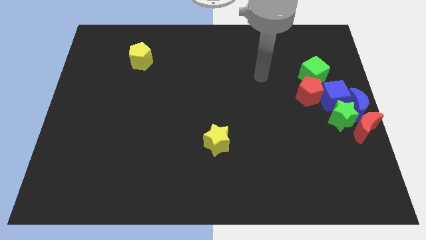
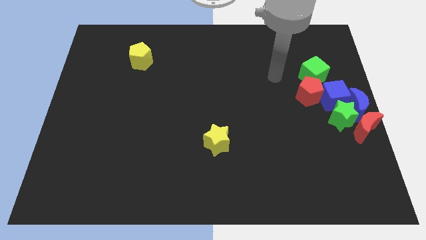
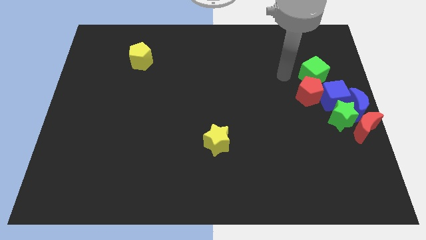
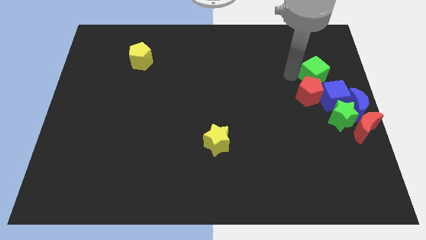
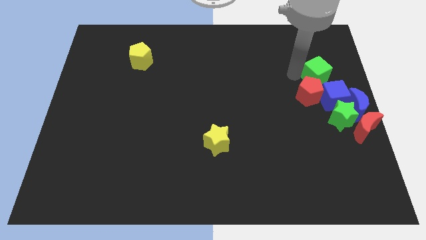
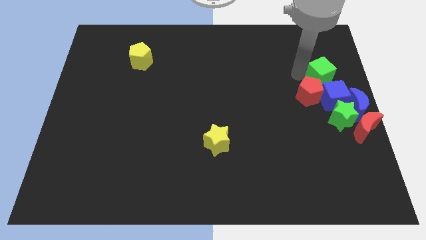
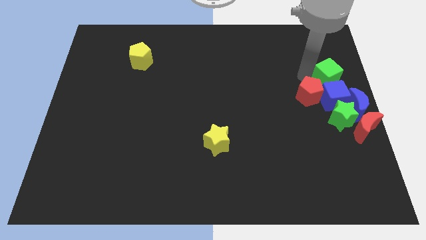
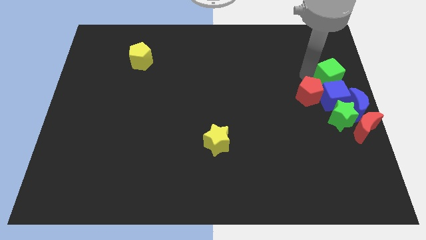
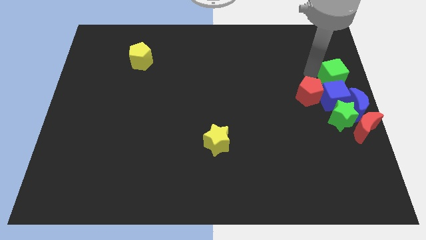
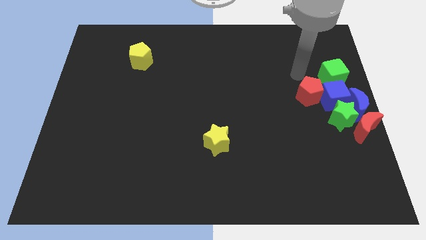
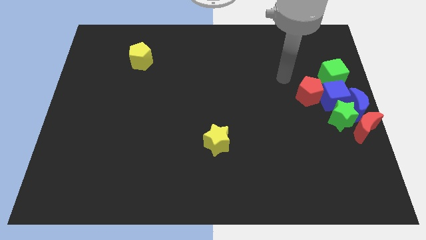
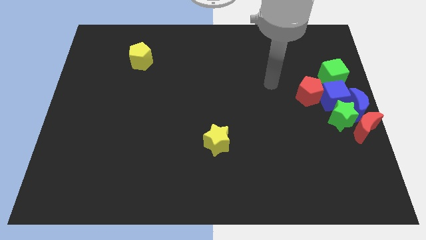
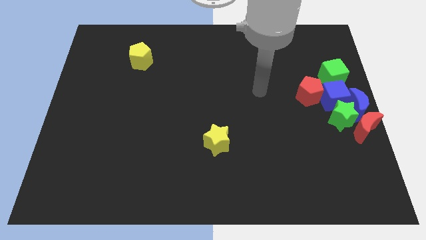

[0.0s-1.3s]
move the green cube to the top of the blue cube

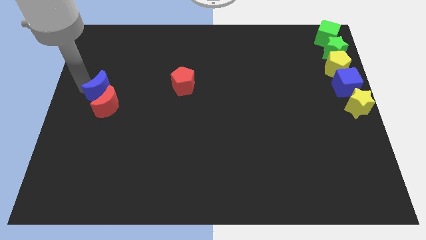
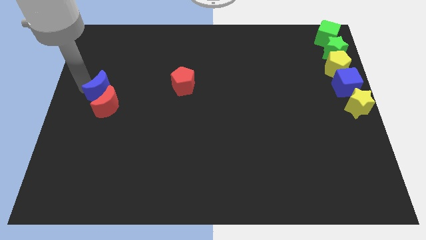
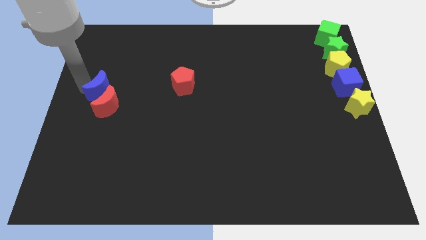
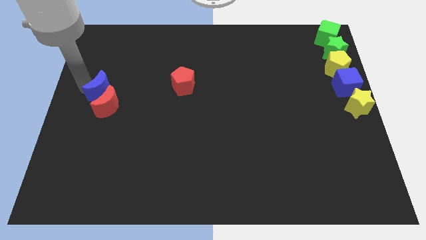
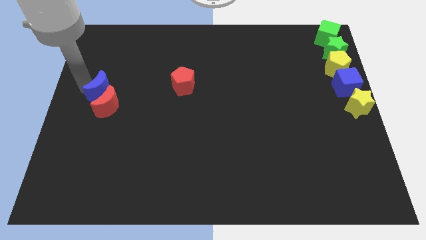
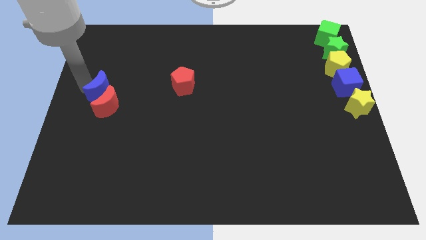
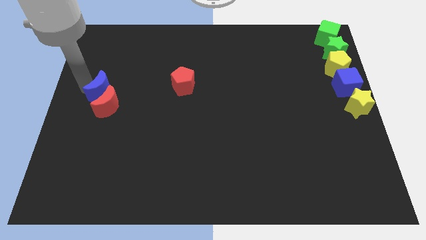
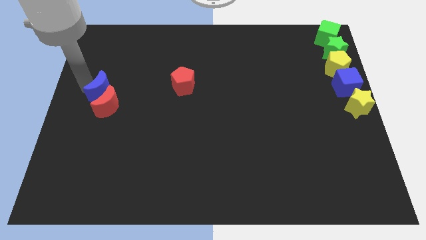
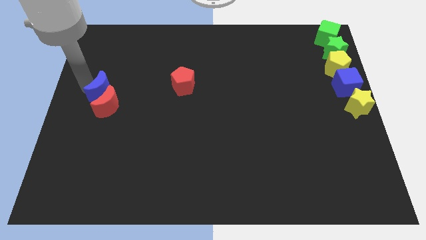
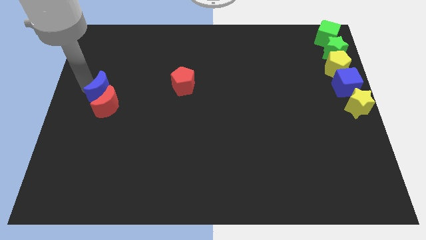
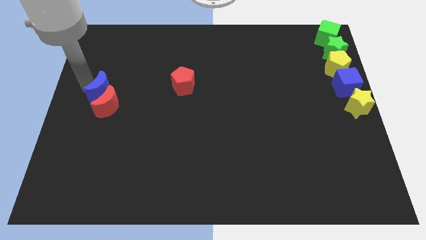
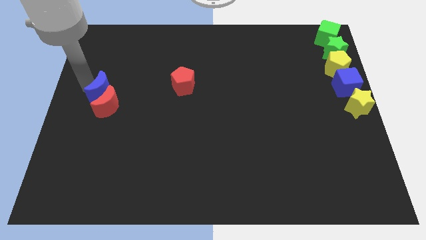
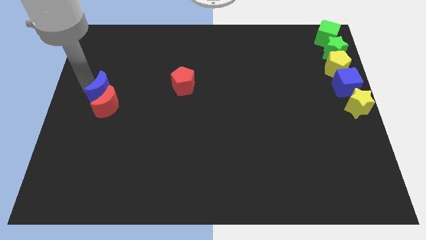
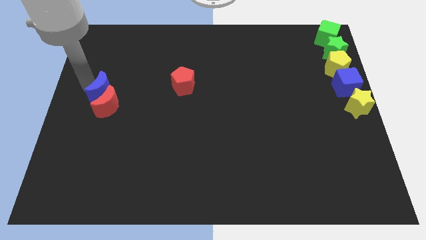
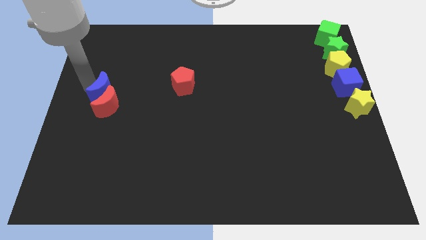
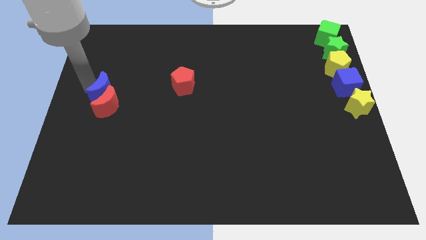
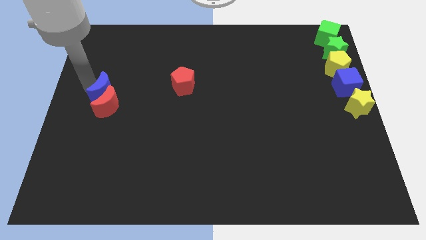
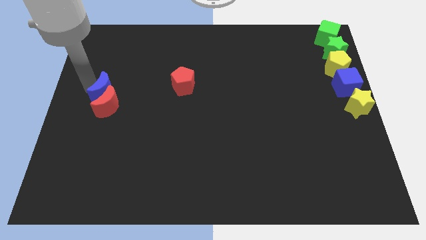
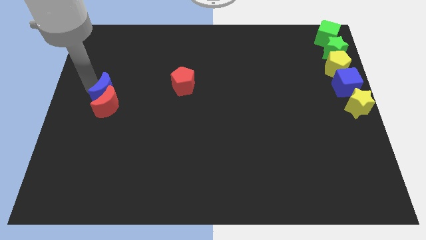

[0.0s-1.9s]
push the blue crescent into the red crescent

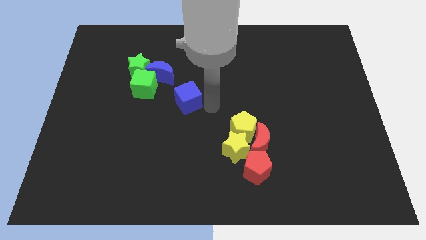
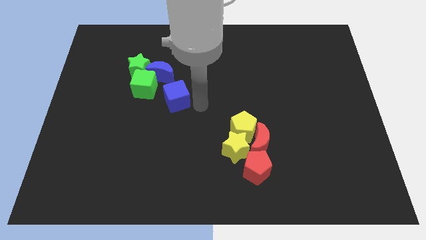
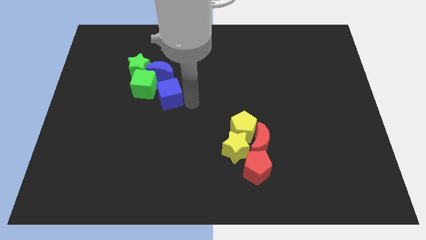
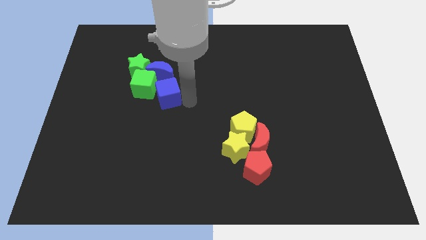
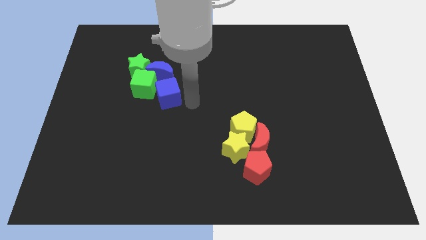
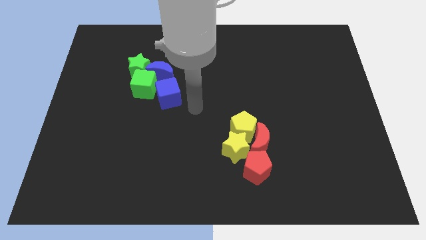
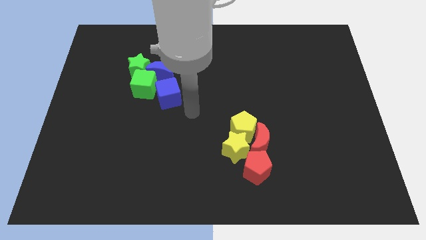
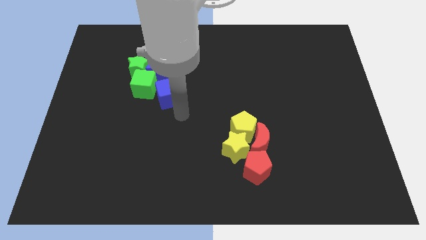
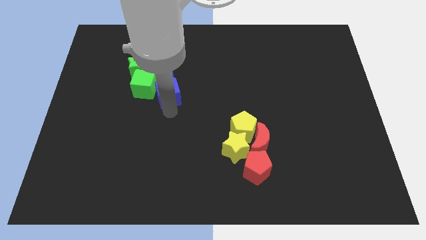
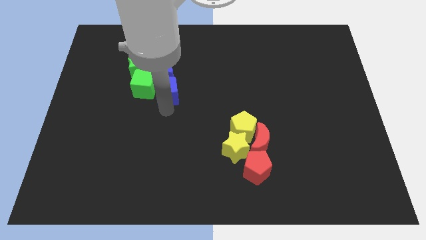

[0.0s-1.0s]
place blue cube below blue crescent

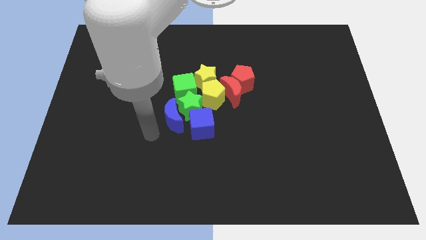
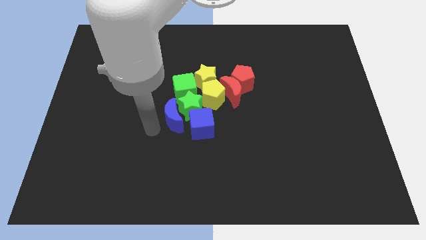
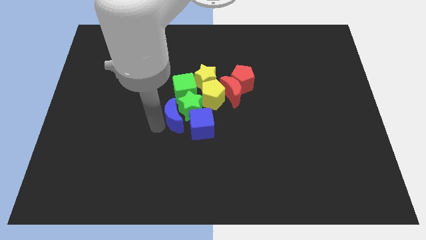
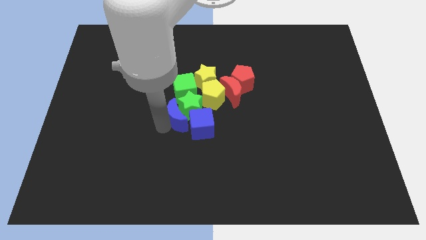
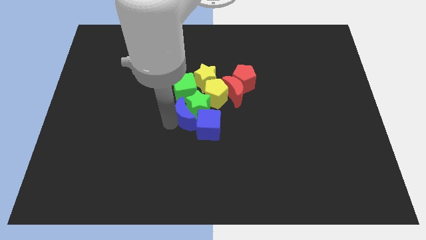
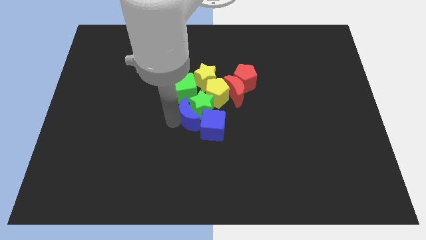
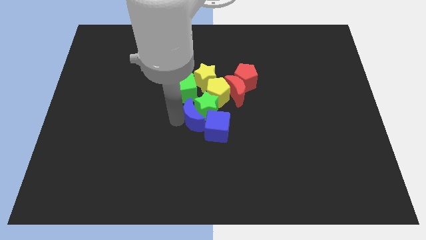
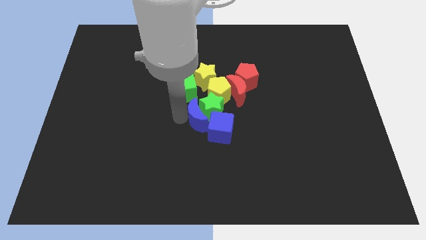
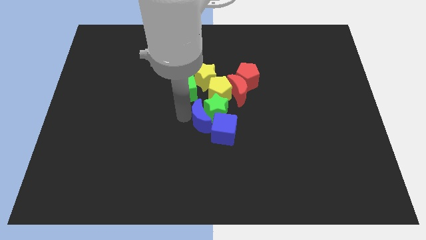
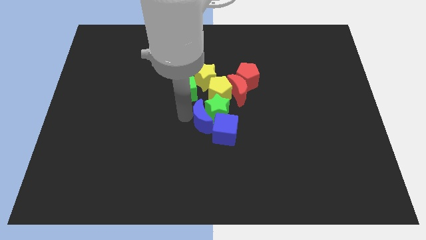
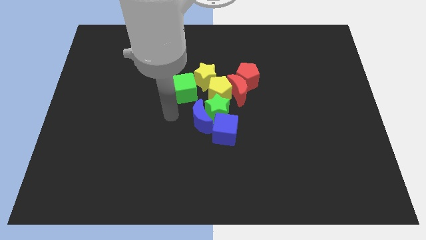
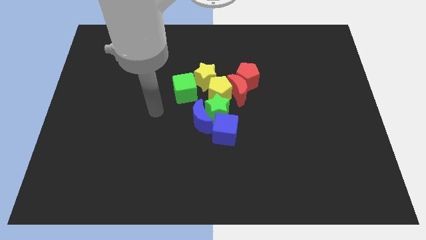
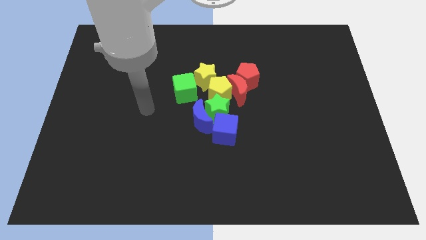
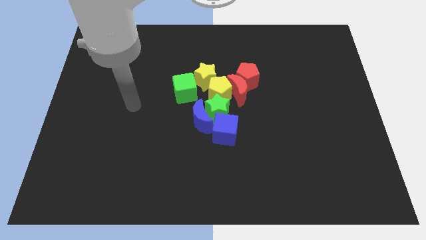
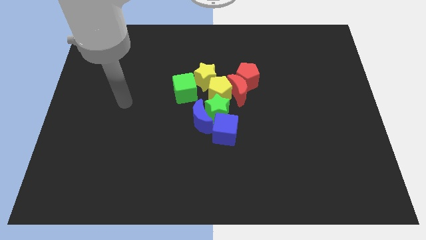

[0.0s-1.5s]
push both the blue blocks into the group of blocks

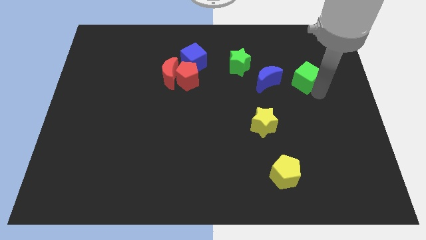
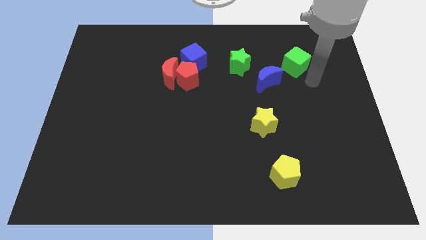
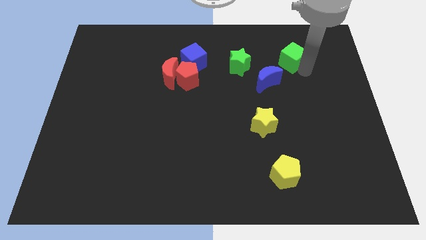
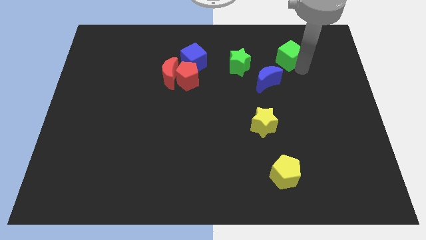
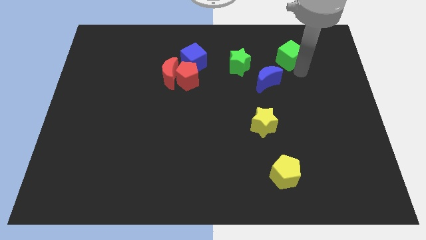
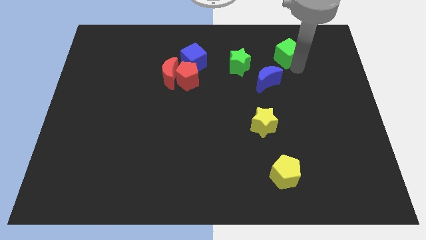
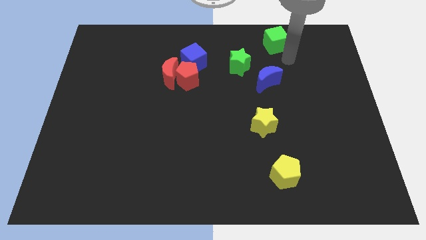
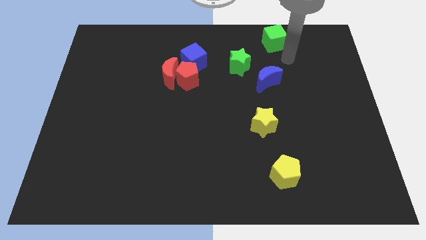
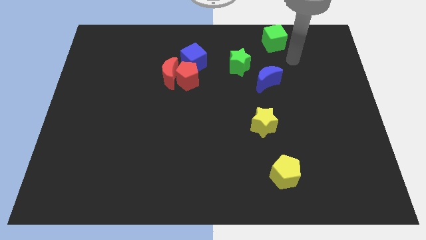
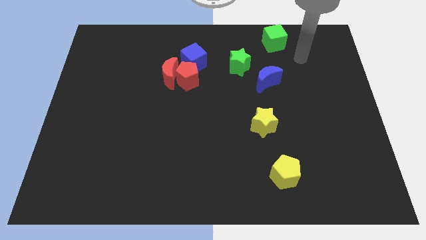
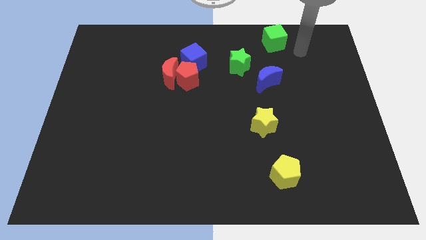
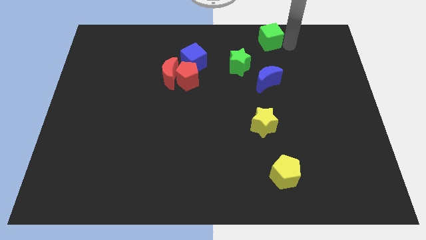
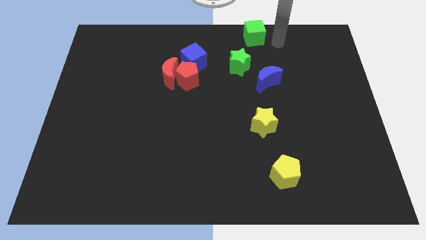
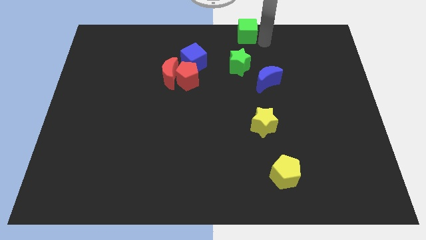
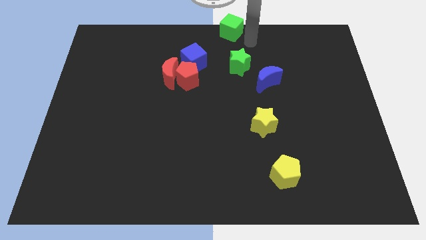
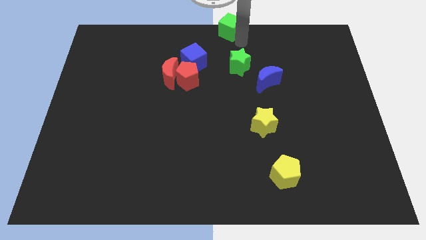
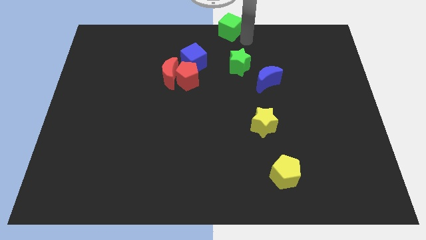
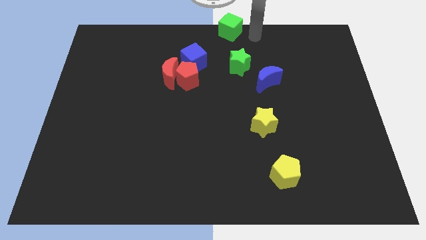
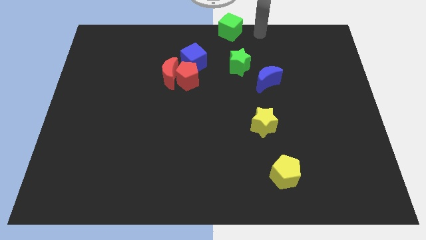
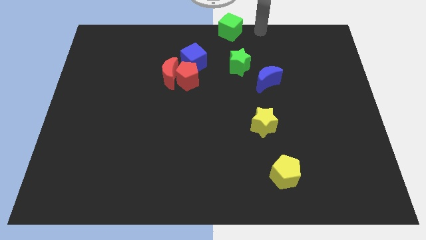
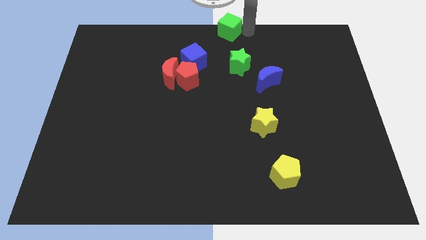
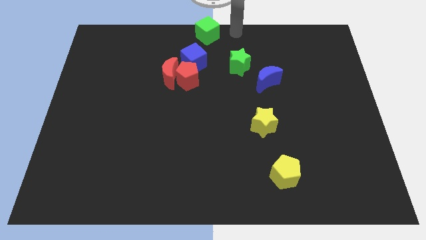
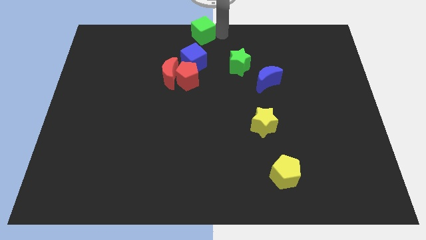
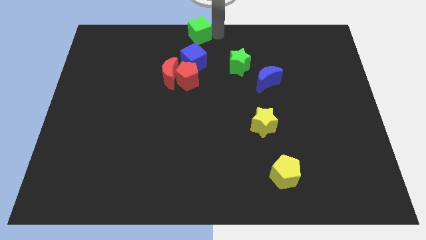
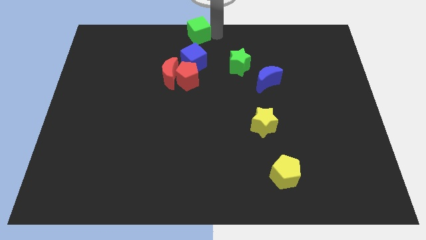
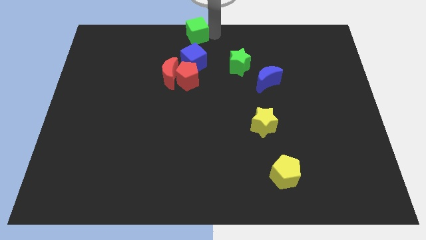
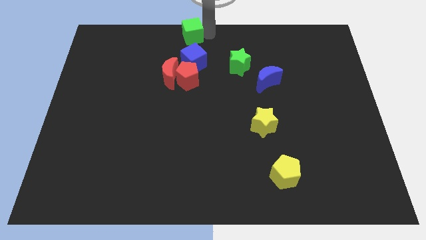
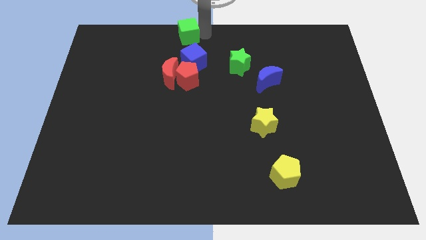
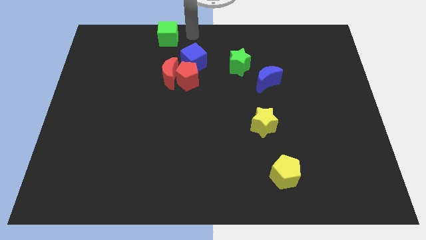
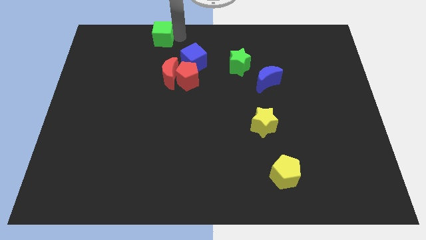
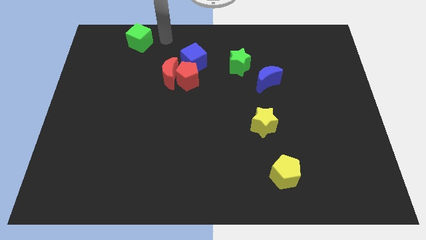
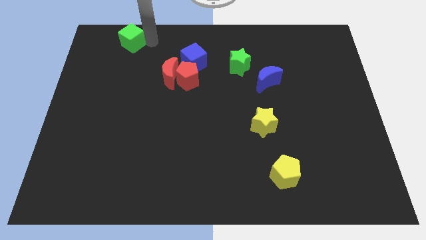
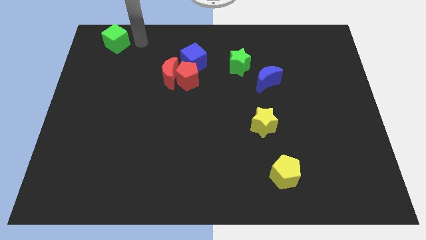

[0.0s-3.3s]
move the green cube to the left top
